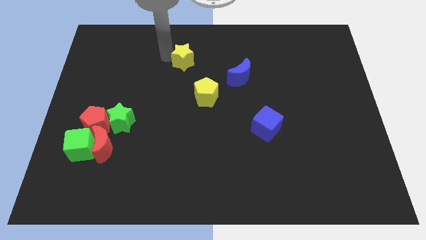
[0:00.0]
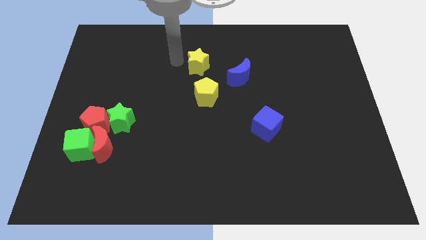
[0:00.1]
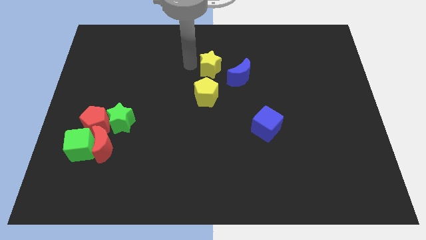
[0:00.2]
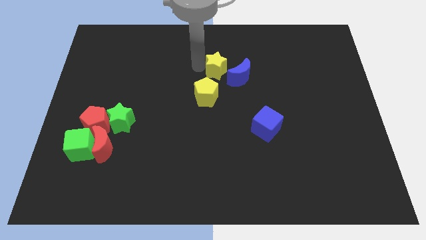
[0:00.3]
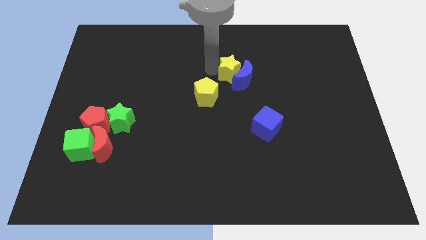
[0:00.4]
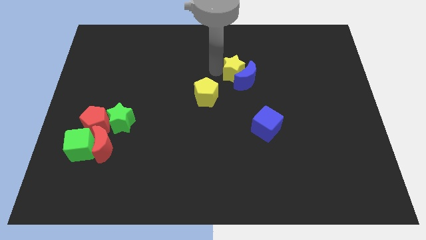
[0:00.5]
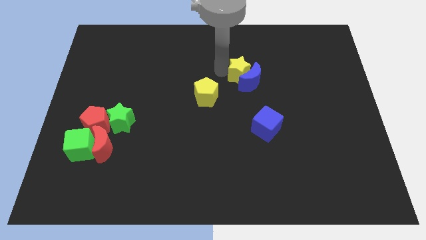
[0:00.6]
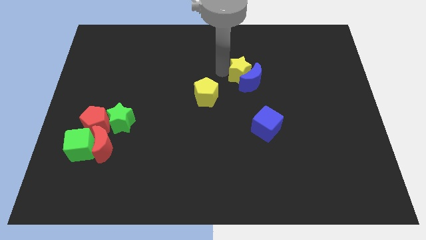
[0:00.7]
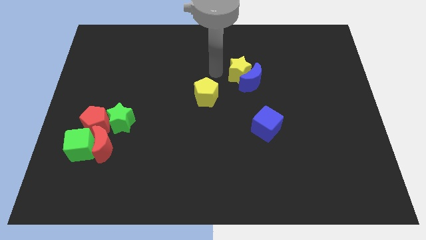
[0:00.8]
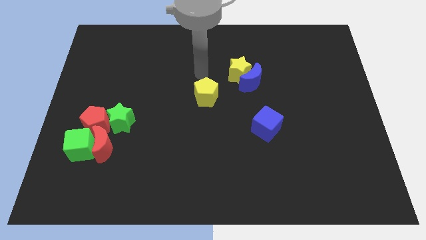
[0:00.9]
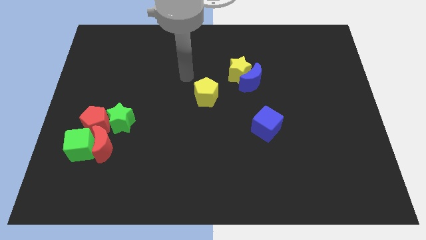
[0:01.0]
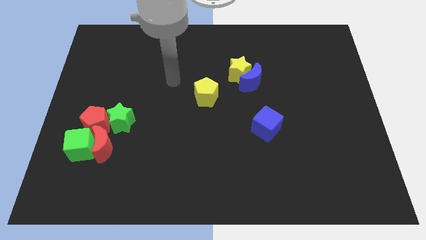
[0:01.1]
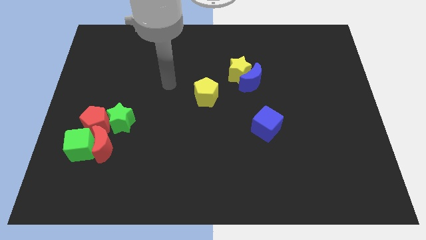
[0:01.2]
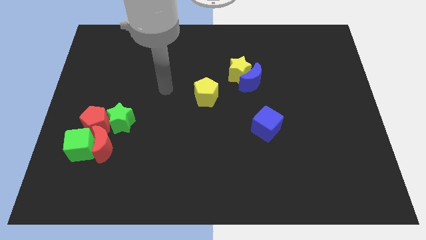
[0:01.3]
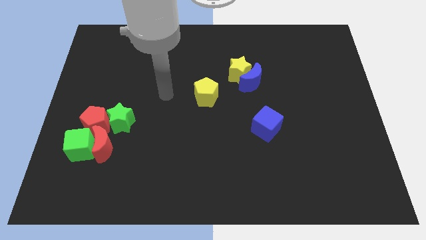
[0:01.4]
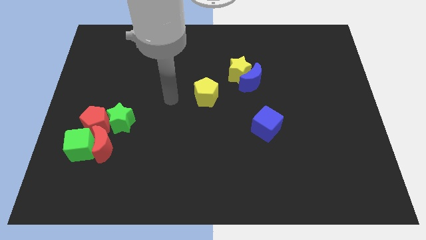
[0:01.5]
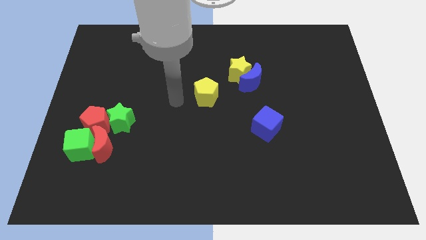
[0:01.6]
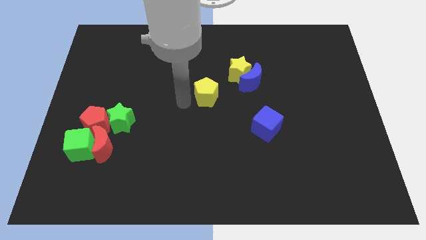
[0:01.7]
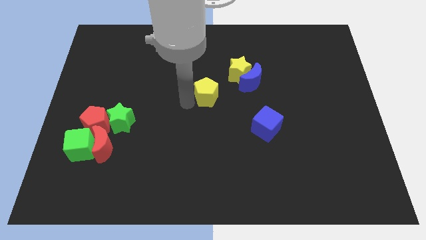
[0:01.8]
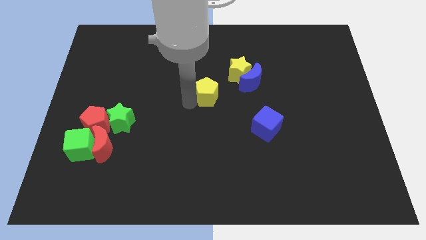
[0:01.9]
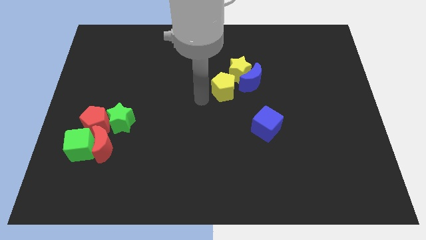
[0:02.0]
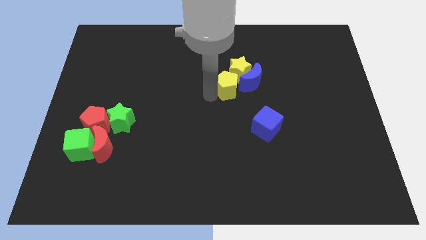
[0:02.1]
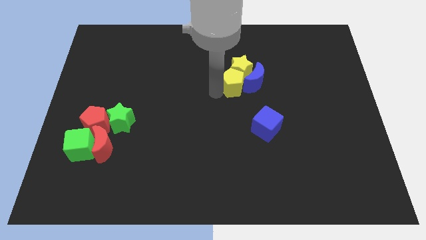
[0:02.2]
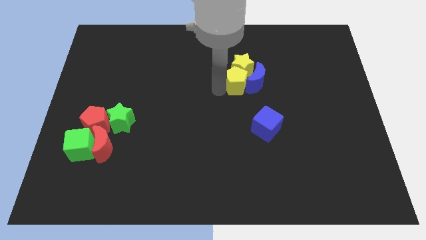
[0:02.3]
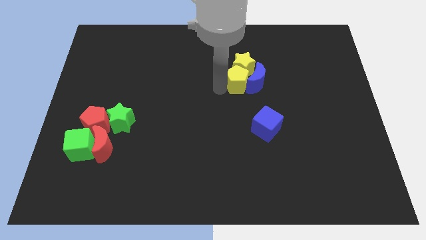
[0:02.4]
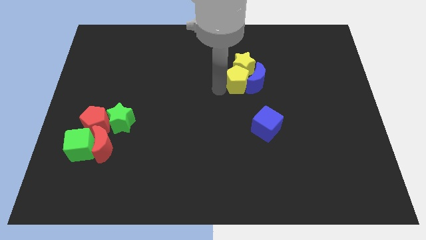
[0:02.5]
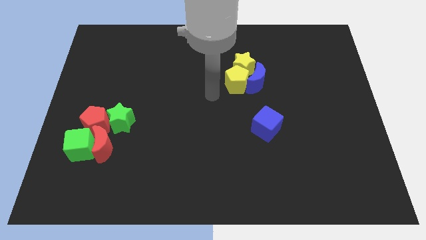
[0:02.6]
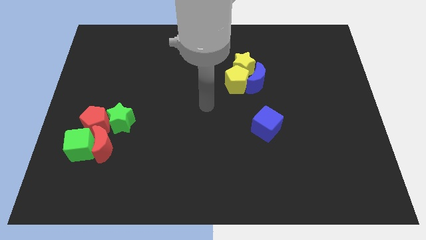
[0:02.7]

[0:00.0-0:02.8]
place yellow pentagon below yellow star

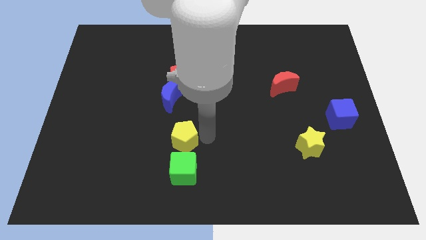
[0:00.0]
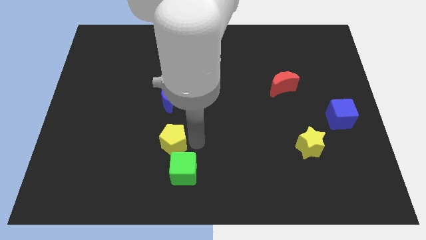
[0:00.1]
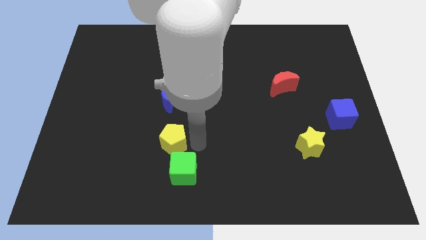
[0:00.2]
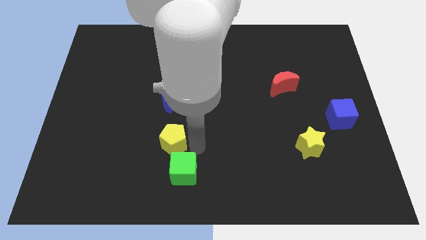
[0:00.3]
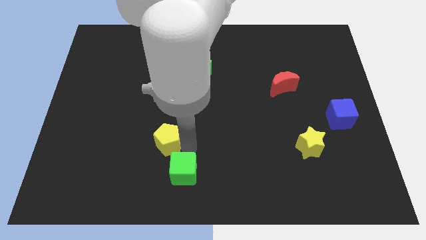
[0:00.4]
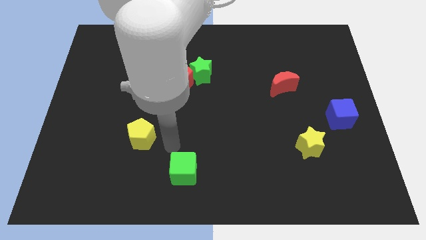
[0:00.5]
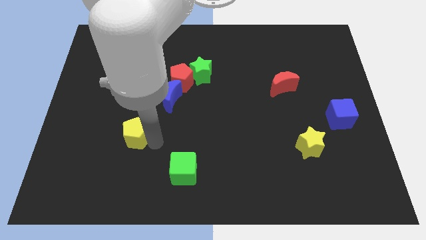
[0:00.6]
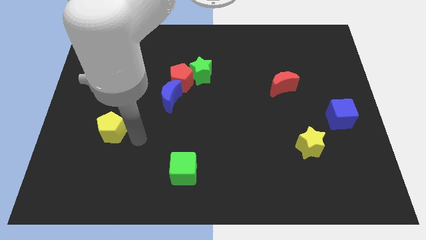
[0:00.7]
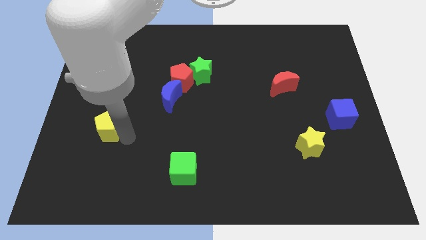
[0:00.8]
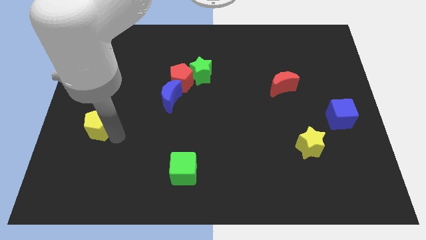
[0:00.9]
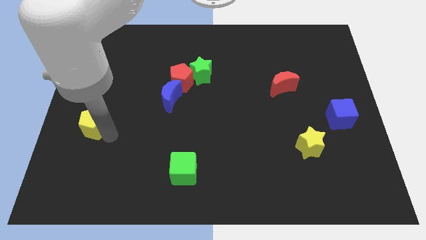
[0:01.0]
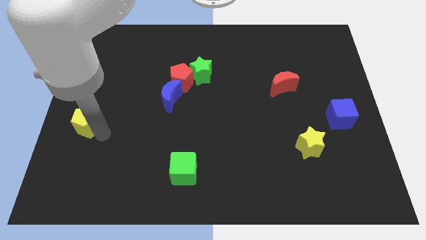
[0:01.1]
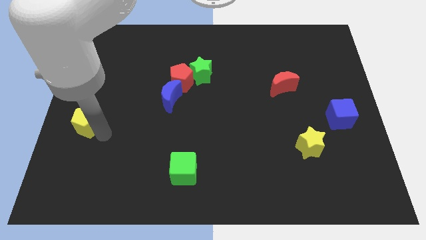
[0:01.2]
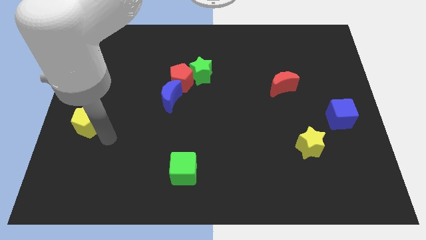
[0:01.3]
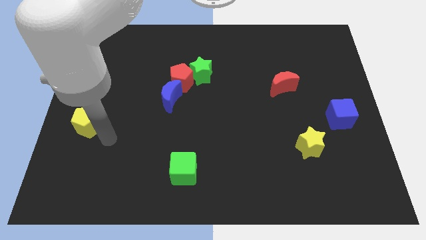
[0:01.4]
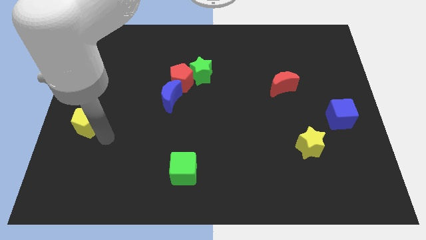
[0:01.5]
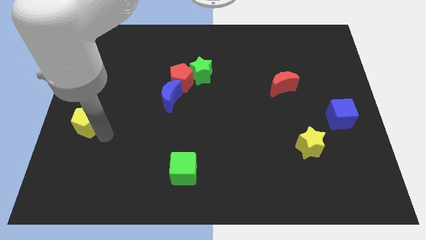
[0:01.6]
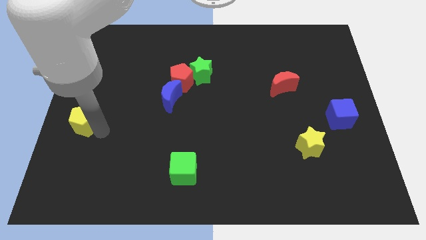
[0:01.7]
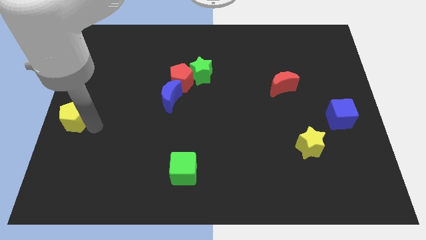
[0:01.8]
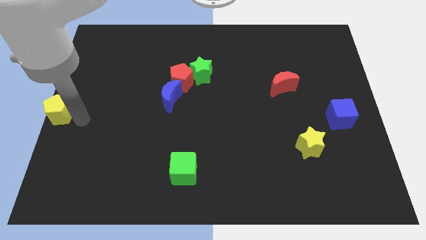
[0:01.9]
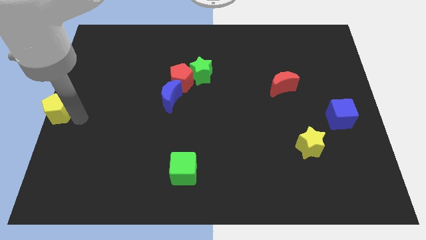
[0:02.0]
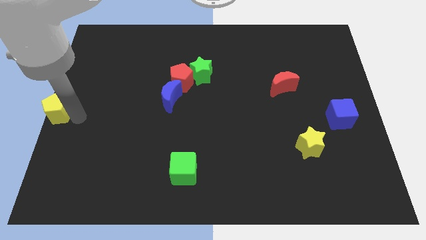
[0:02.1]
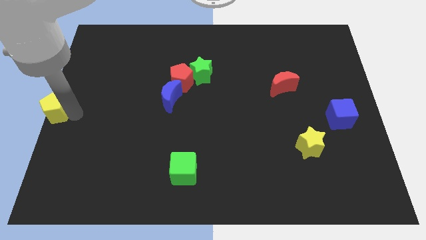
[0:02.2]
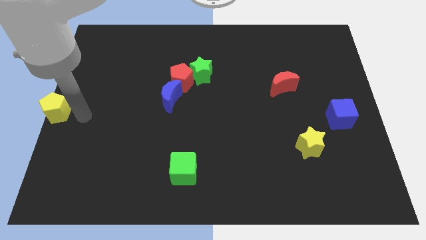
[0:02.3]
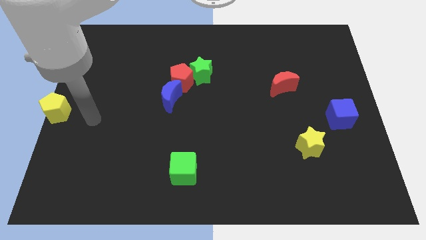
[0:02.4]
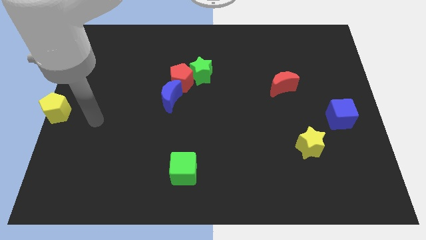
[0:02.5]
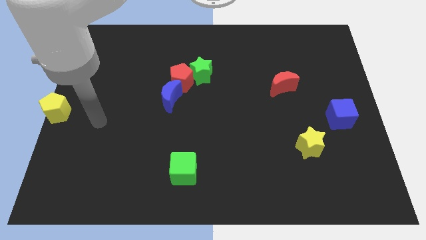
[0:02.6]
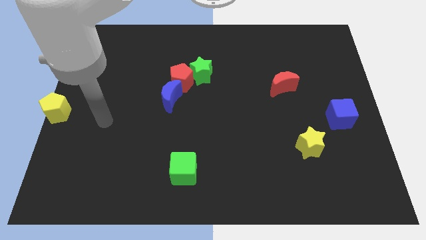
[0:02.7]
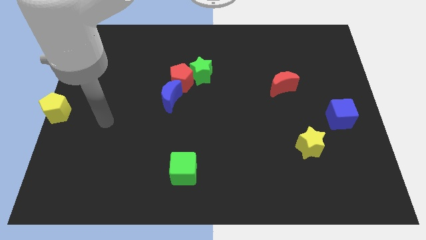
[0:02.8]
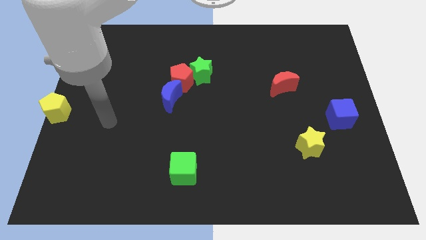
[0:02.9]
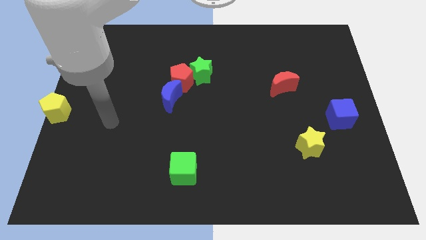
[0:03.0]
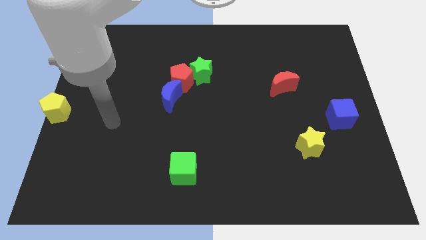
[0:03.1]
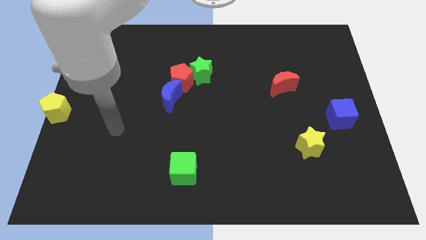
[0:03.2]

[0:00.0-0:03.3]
move the yellow pentagon to left center of the board

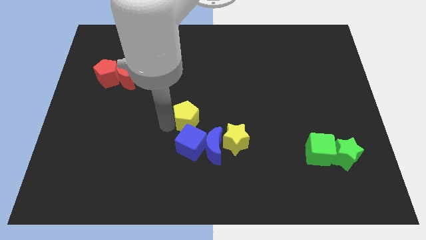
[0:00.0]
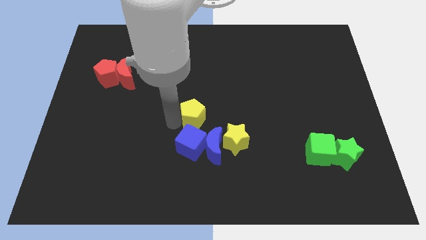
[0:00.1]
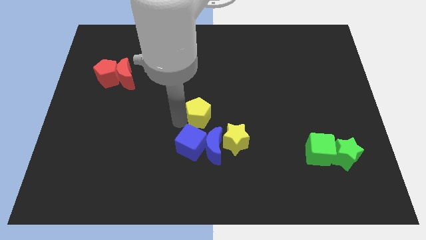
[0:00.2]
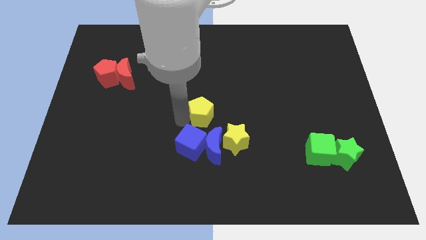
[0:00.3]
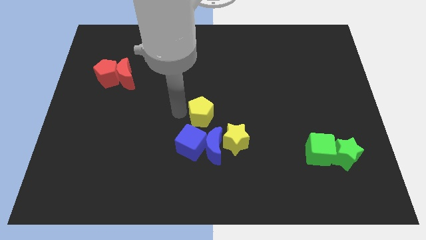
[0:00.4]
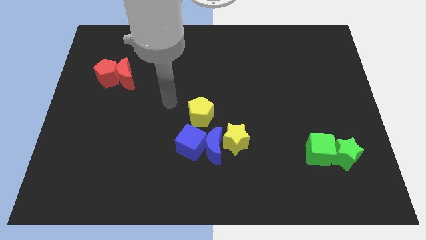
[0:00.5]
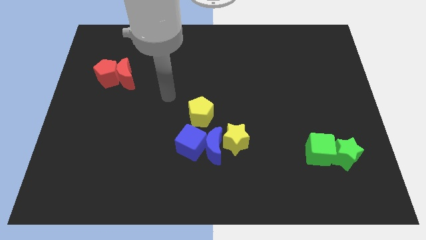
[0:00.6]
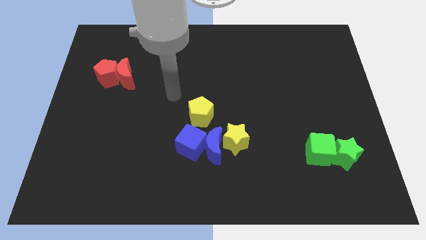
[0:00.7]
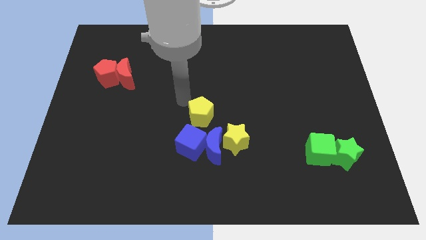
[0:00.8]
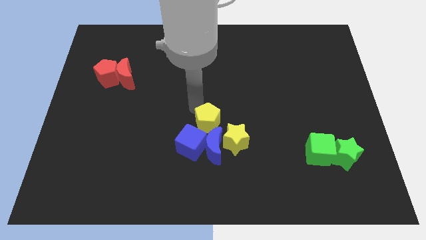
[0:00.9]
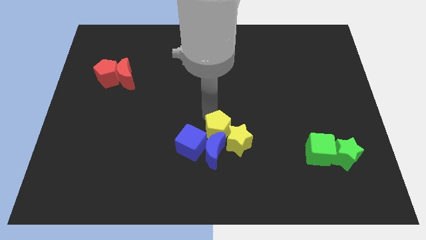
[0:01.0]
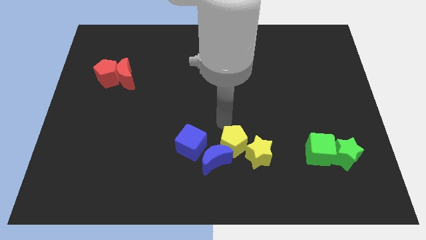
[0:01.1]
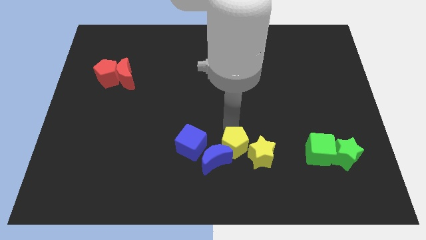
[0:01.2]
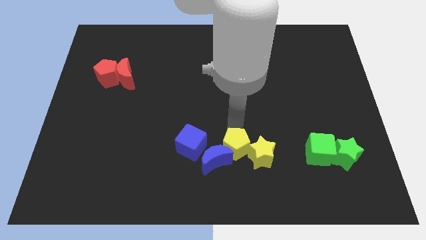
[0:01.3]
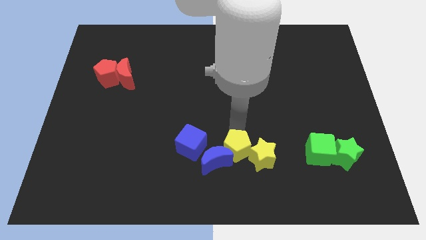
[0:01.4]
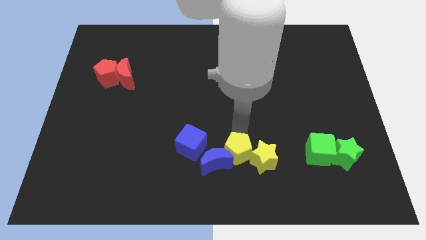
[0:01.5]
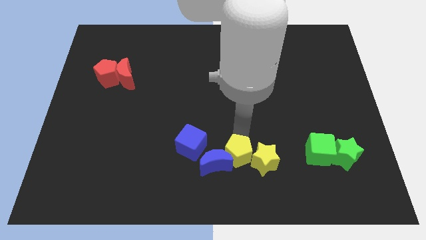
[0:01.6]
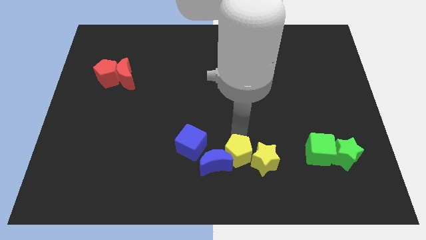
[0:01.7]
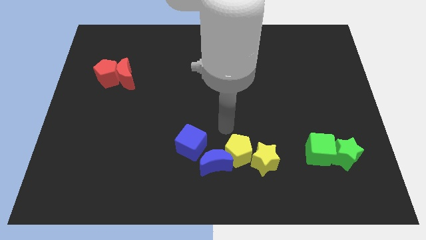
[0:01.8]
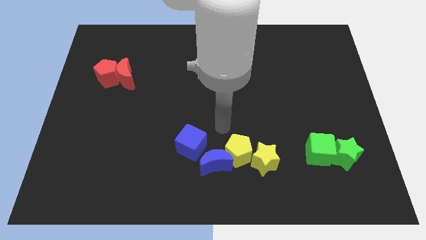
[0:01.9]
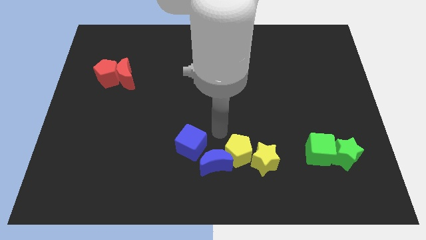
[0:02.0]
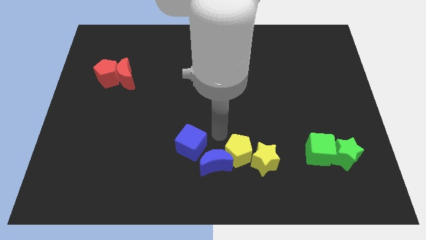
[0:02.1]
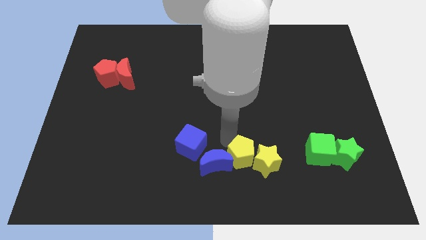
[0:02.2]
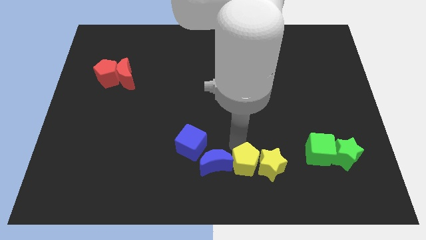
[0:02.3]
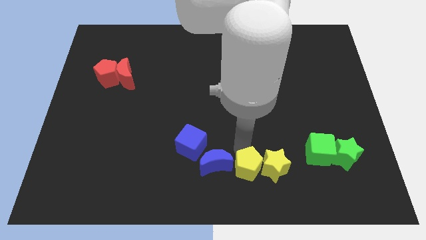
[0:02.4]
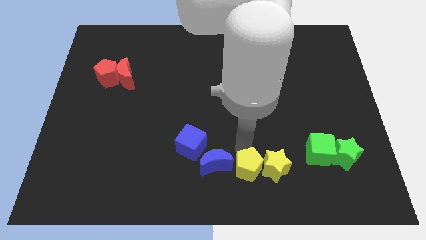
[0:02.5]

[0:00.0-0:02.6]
slide the yellow pentagon to the right of blue crescent

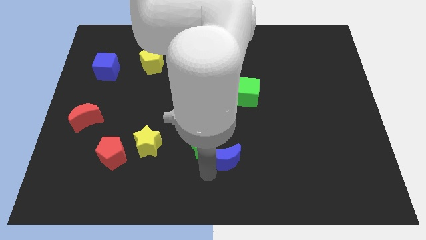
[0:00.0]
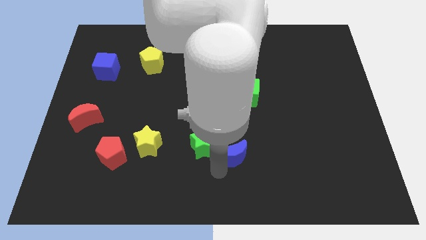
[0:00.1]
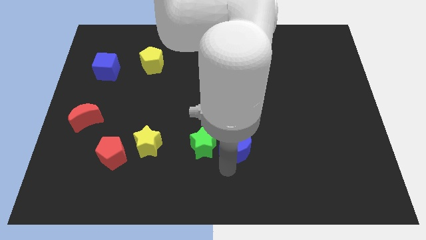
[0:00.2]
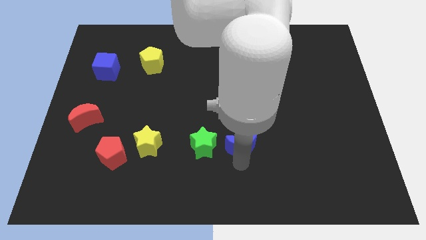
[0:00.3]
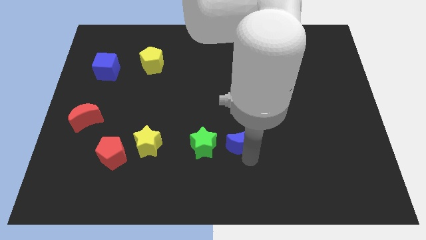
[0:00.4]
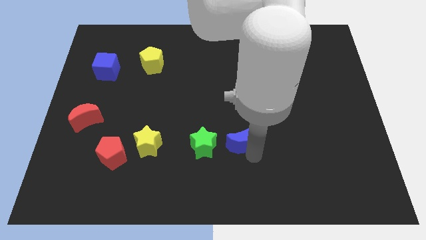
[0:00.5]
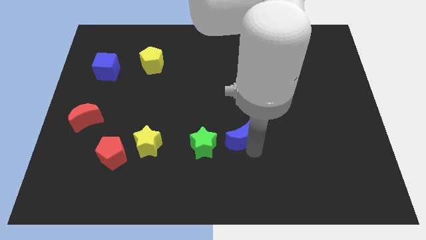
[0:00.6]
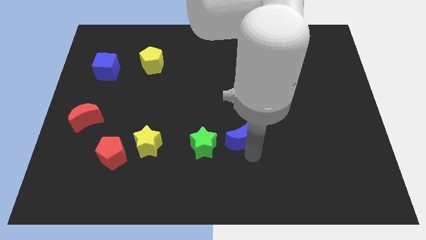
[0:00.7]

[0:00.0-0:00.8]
push the blue crescent to the right of the green star
